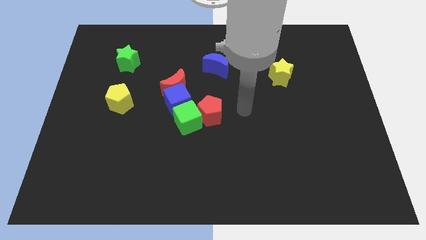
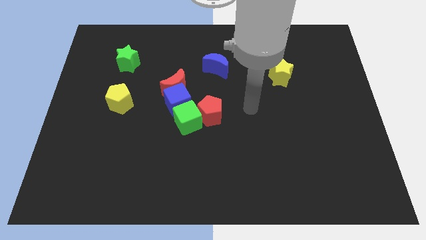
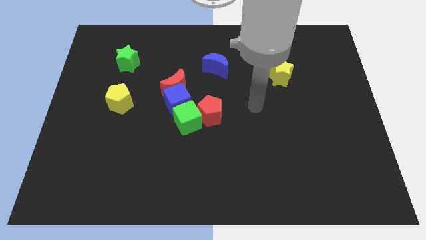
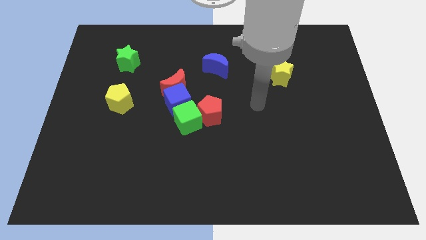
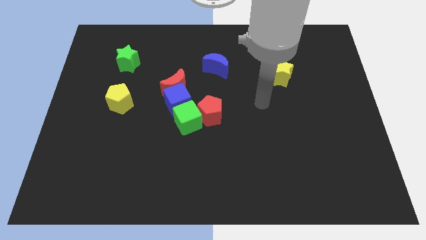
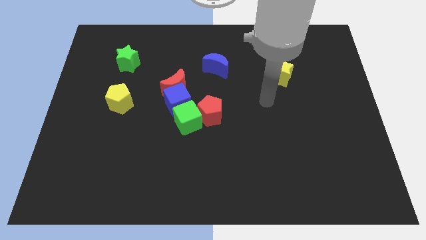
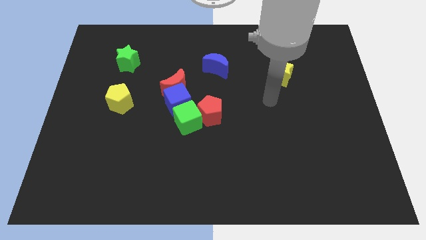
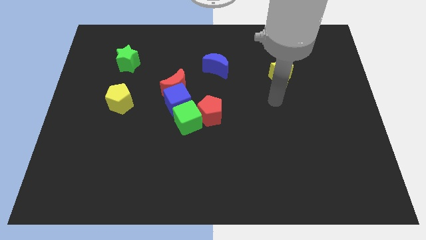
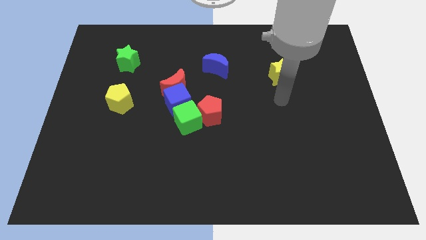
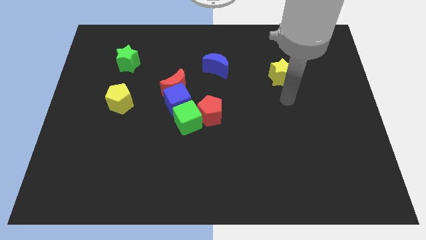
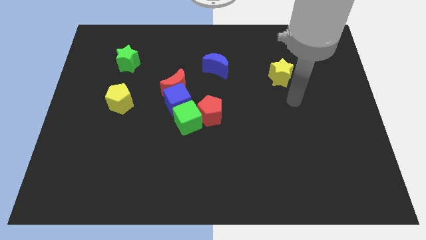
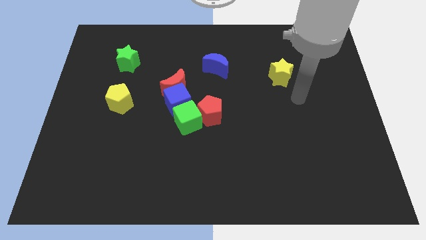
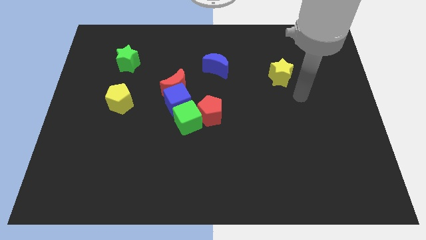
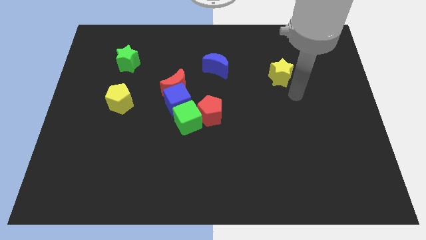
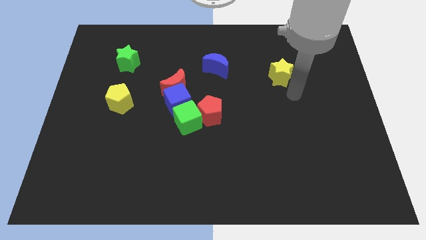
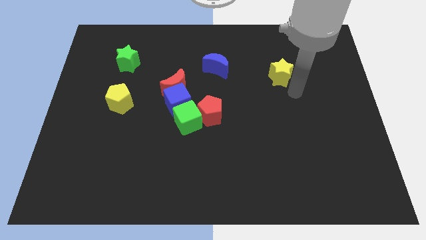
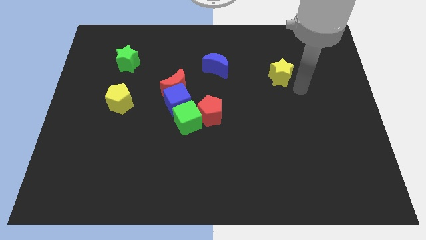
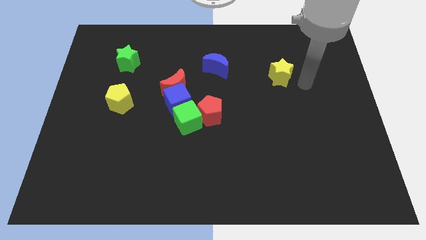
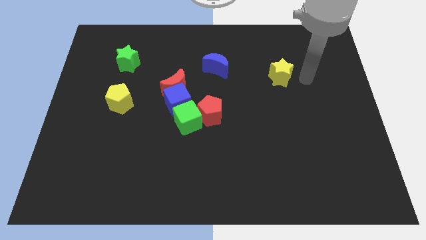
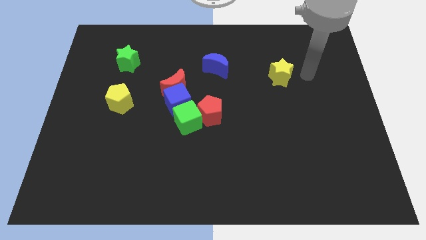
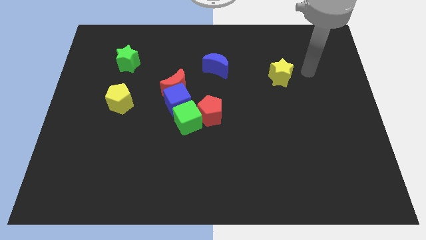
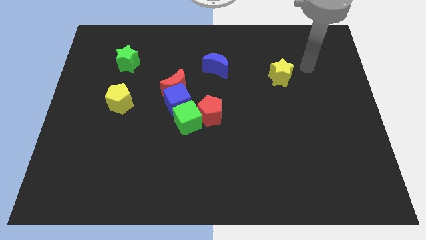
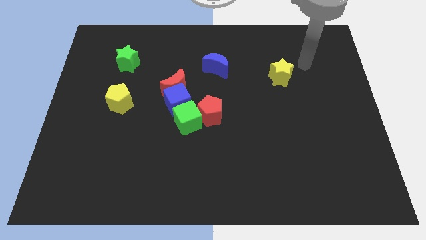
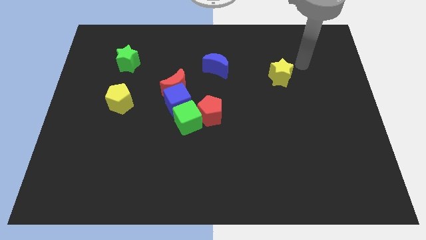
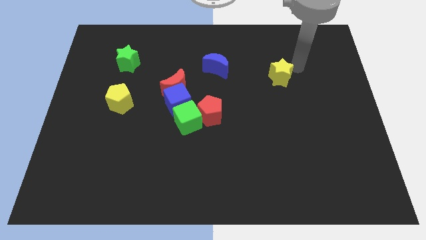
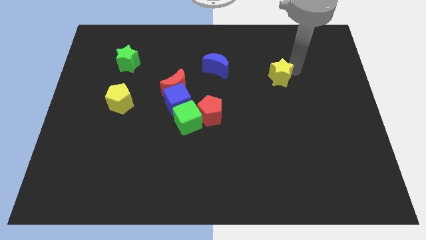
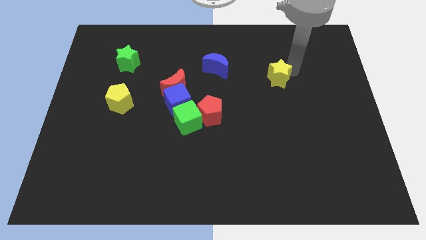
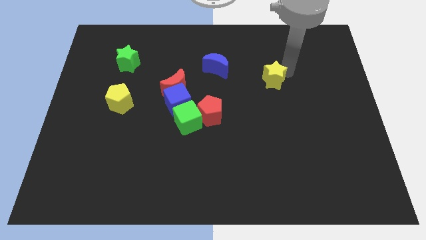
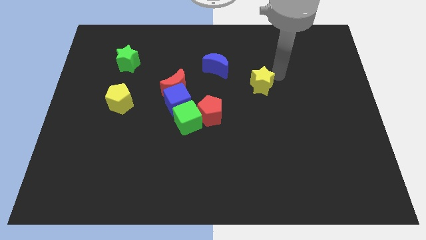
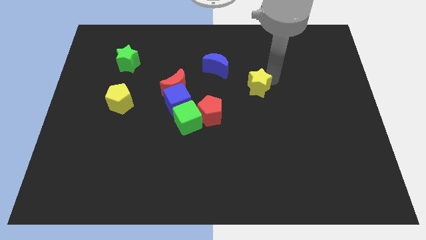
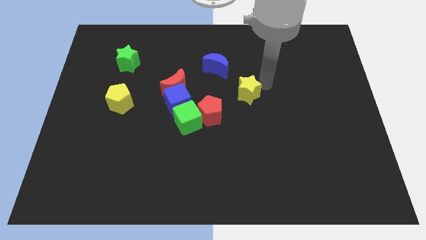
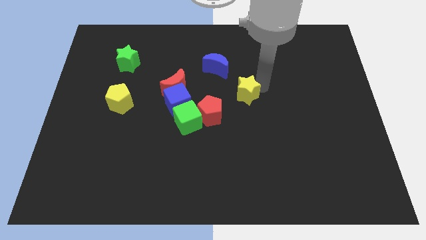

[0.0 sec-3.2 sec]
push the yellow star to the bottom right of the blue crescent

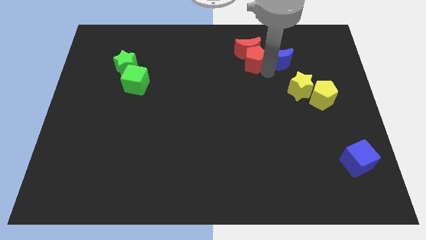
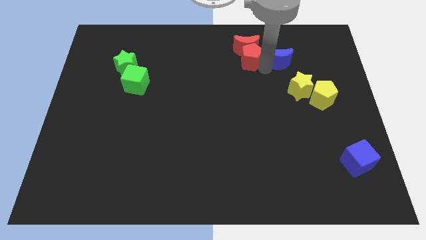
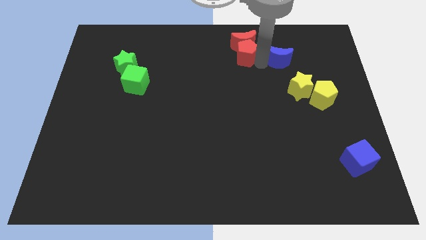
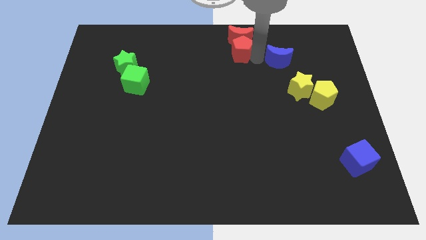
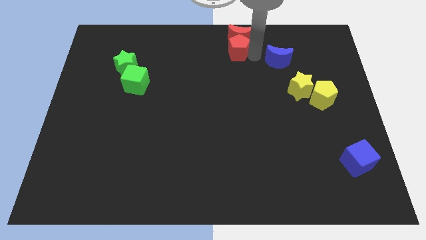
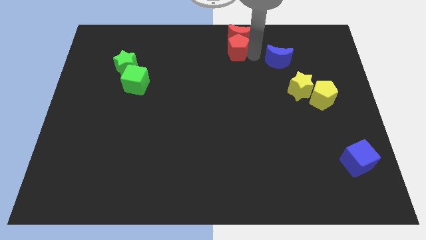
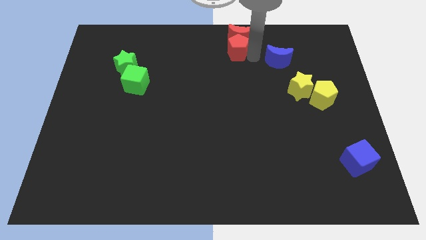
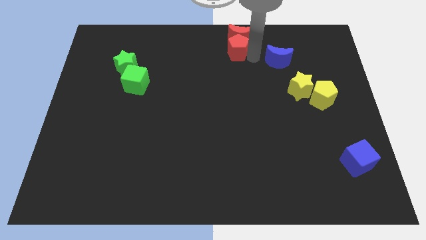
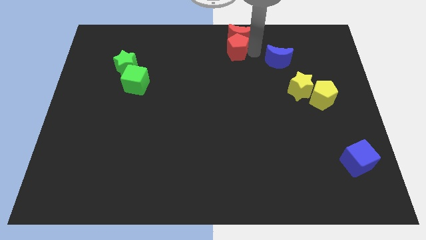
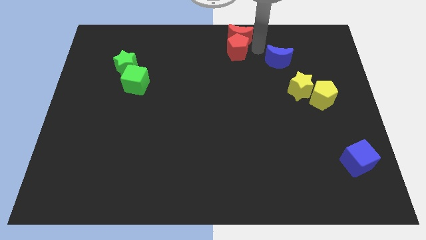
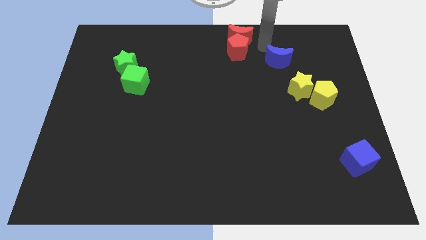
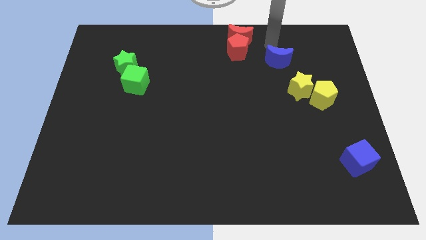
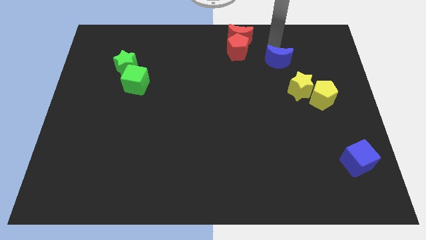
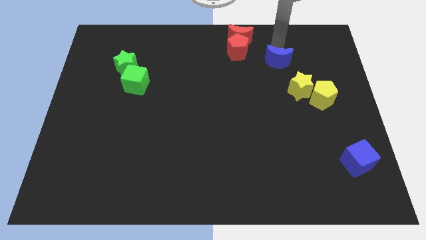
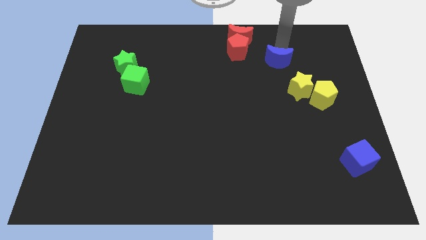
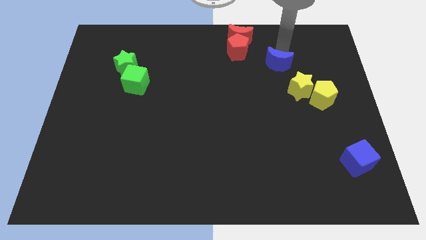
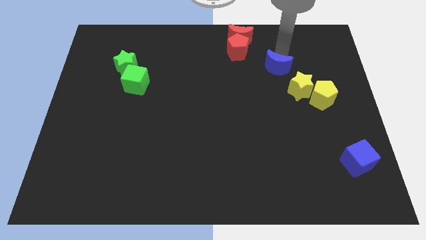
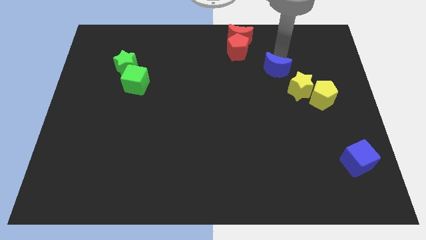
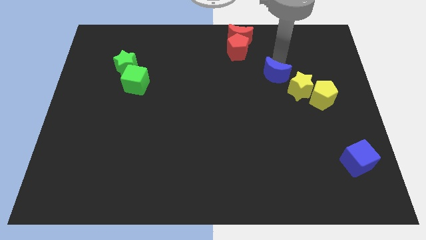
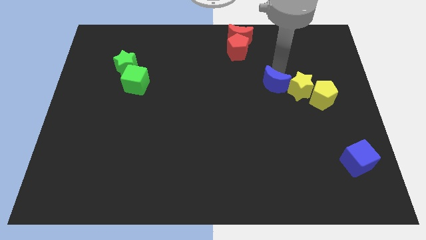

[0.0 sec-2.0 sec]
slightly touch the yellow star with the blue crescent

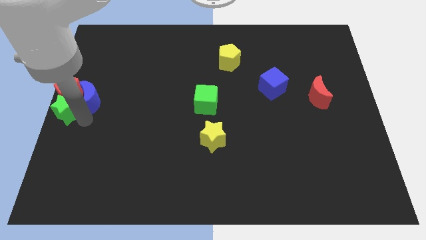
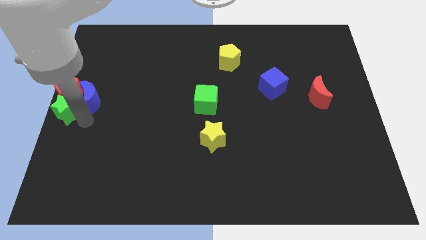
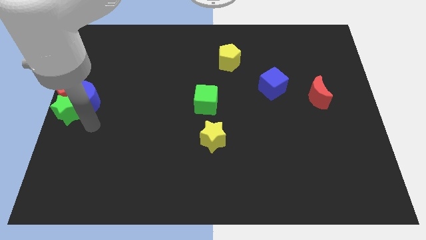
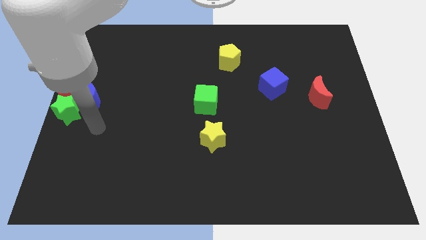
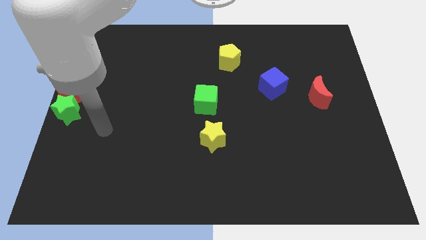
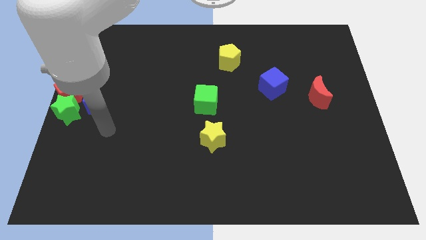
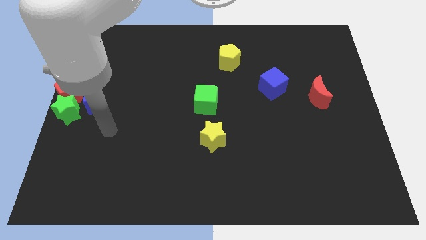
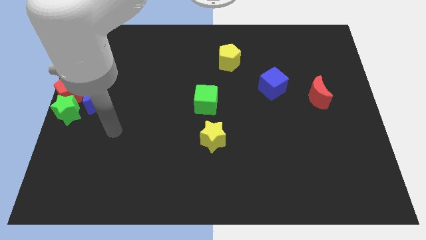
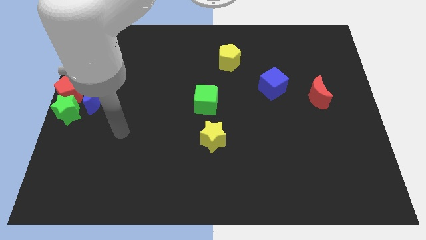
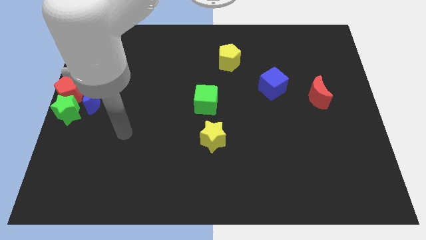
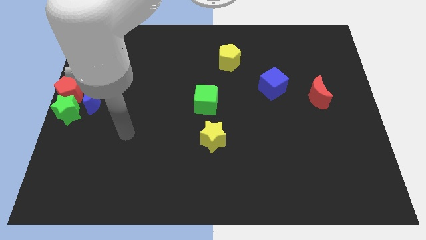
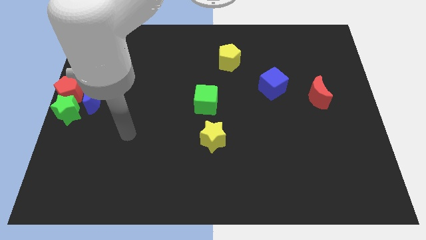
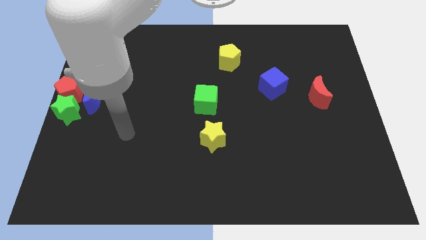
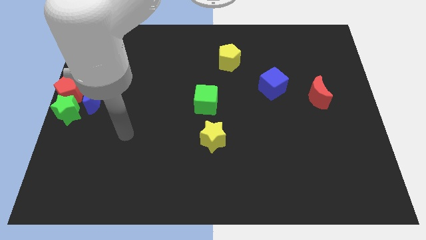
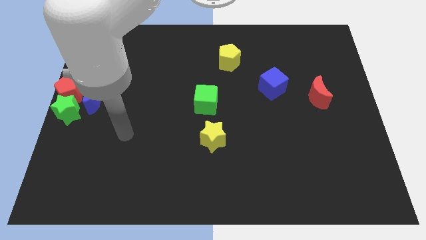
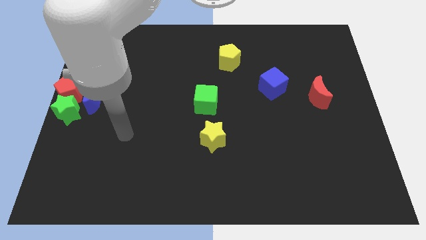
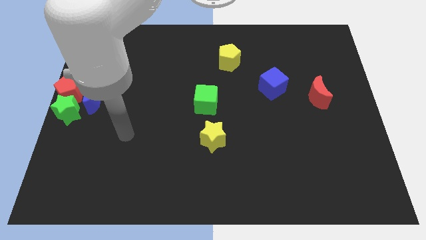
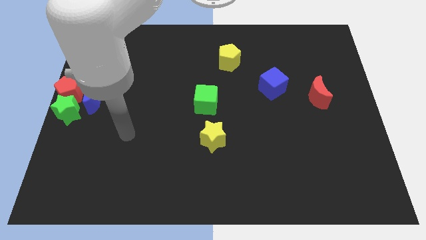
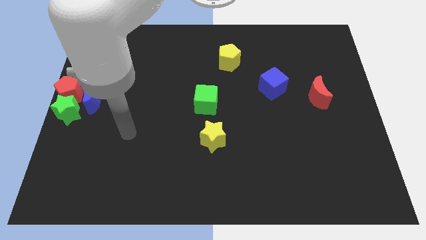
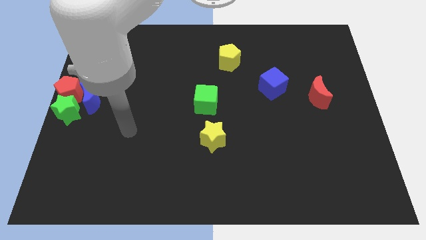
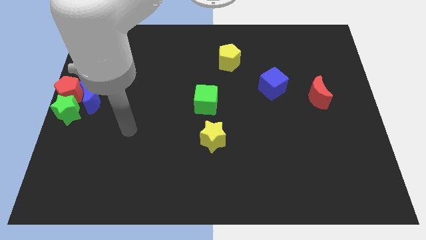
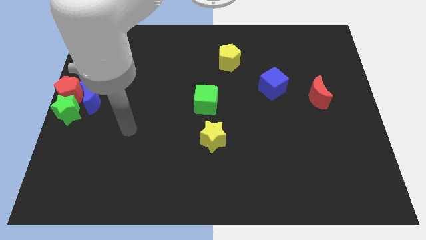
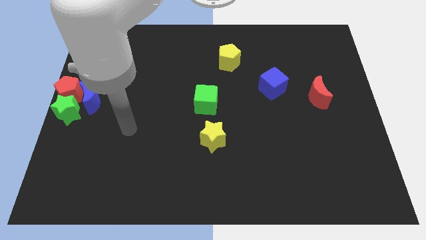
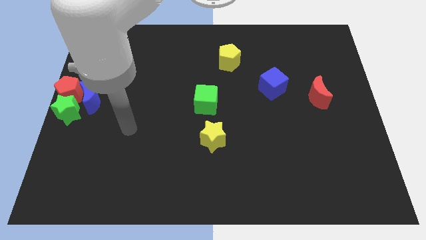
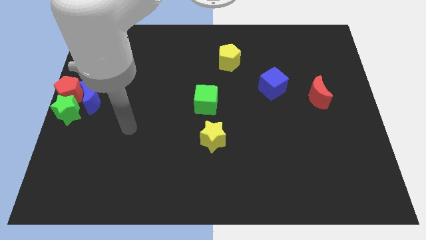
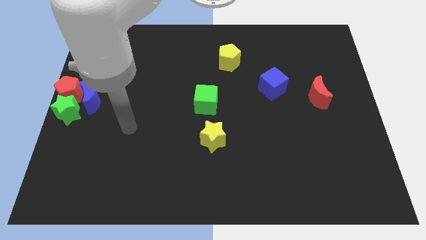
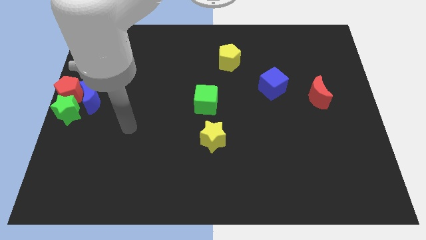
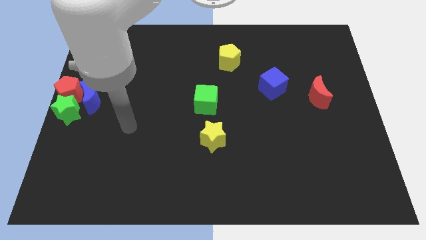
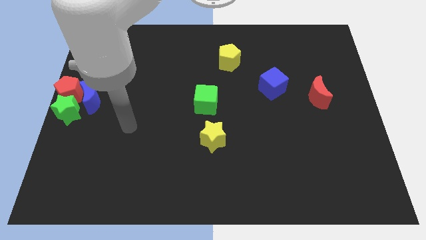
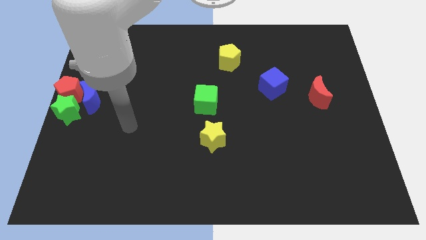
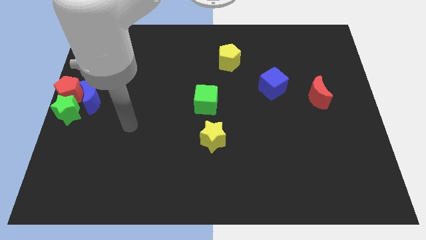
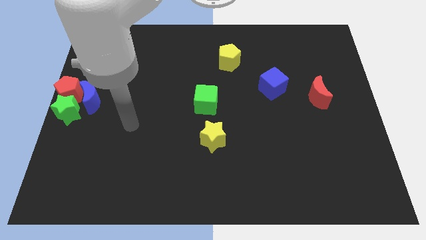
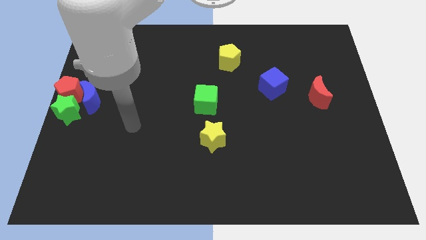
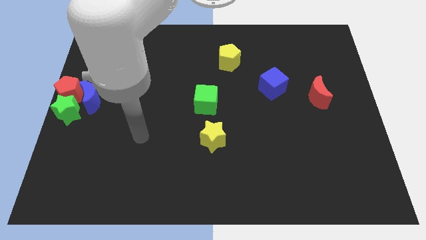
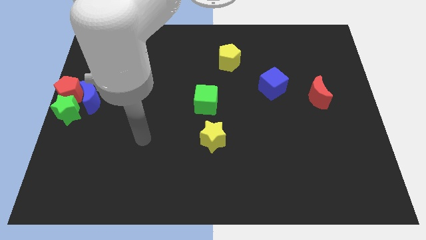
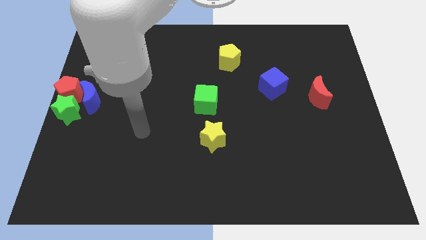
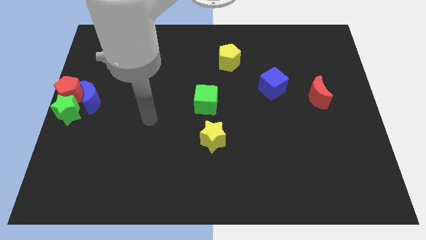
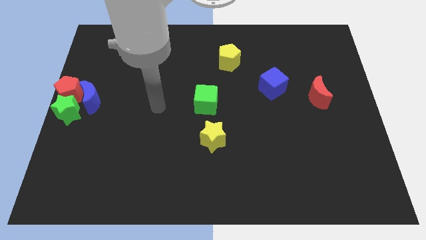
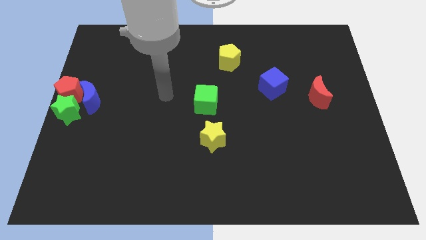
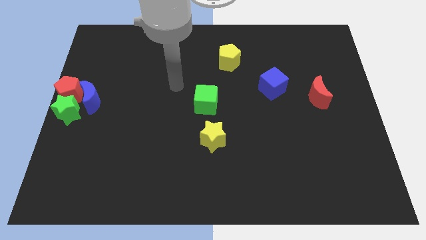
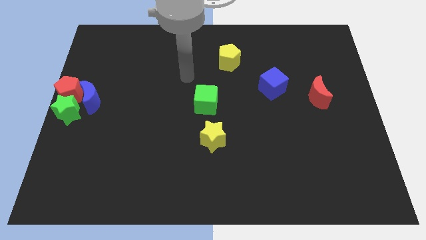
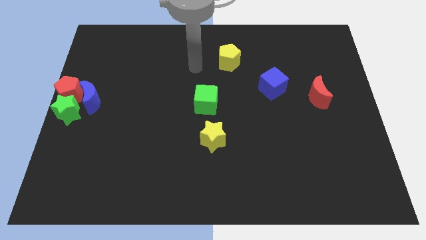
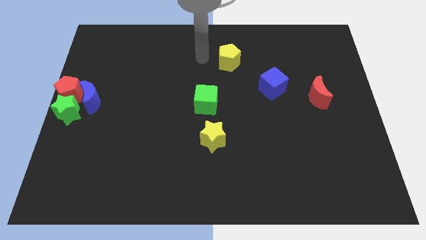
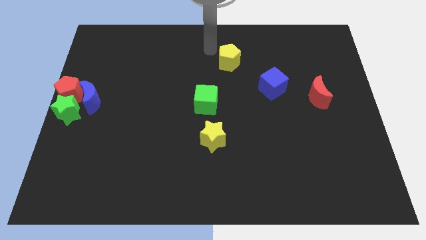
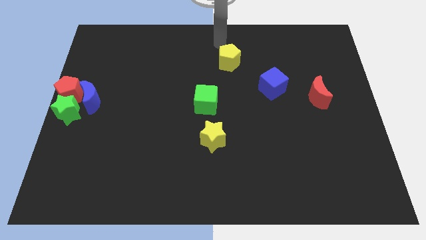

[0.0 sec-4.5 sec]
move arm to the top center of the board
